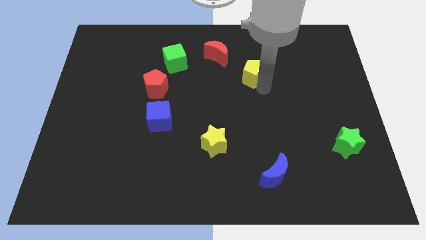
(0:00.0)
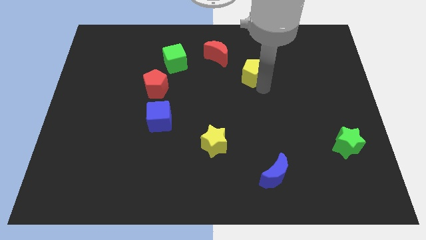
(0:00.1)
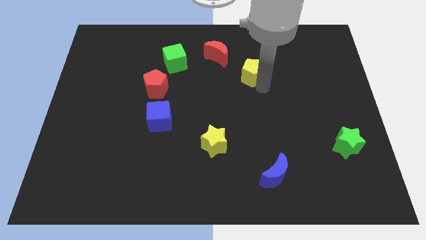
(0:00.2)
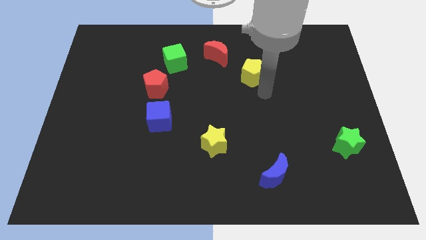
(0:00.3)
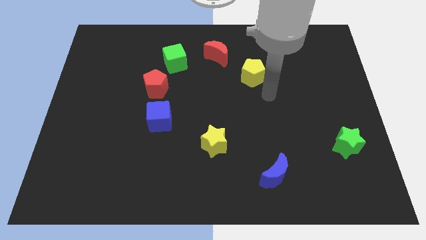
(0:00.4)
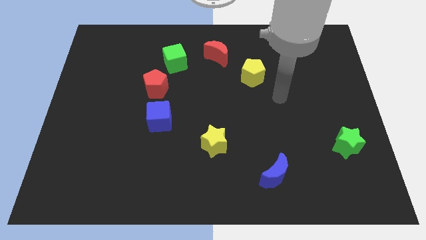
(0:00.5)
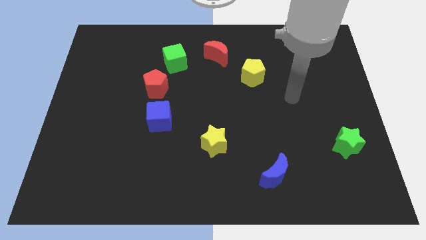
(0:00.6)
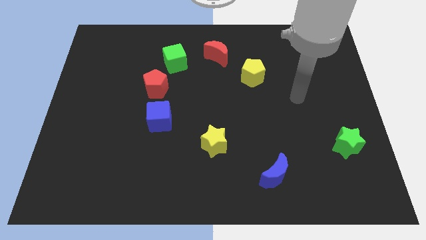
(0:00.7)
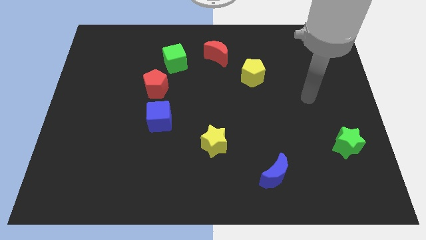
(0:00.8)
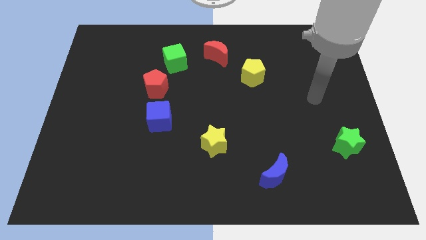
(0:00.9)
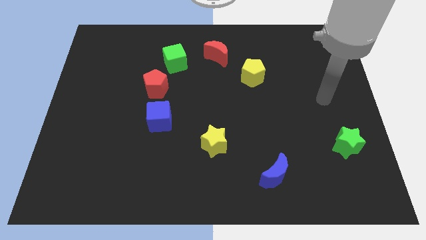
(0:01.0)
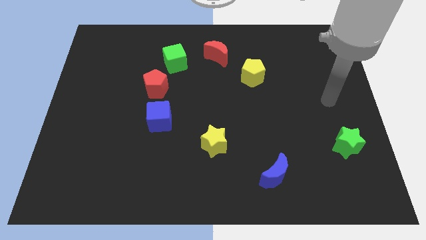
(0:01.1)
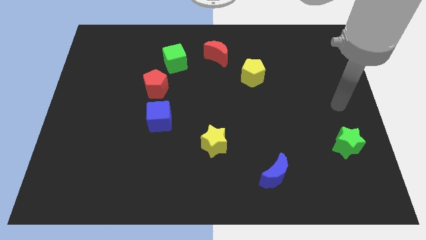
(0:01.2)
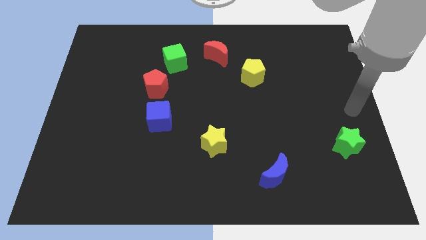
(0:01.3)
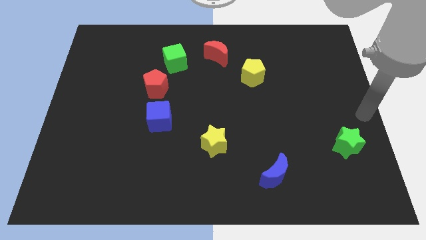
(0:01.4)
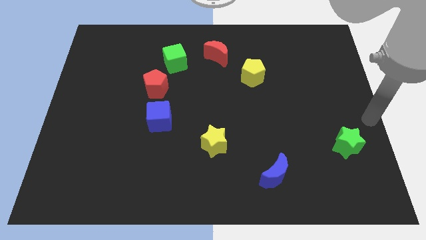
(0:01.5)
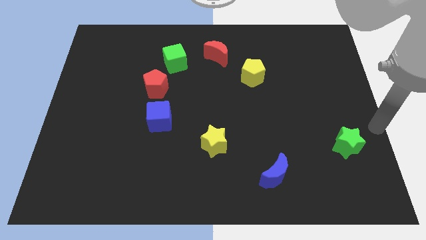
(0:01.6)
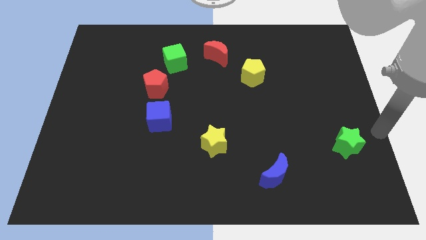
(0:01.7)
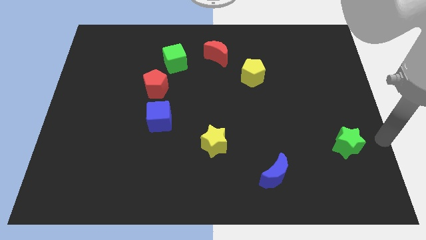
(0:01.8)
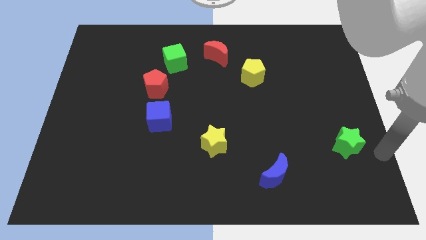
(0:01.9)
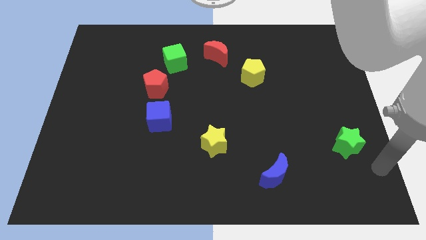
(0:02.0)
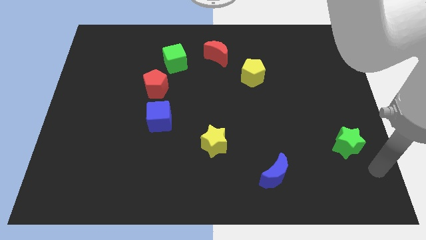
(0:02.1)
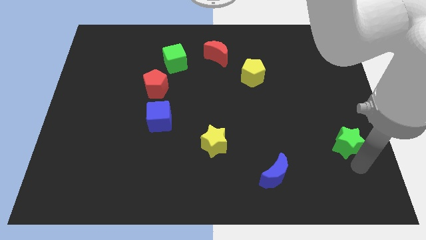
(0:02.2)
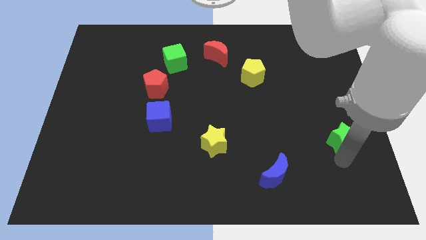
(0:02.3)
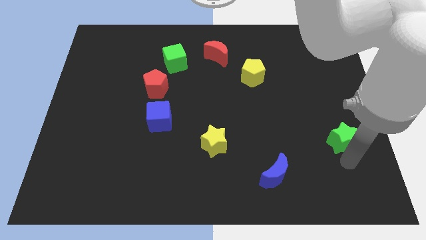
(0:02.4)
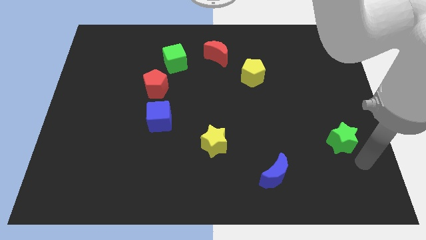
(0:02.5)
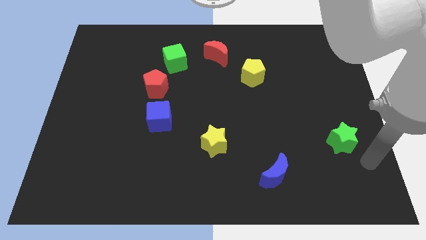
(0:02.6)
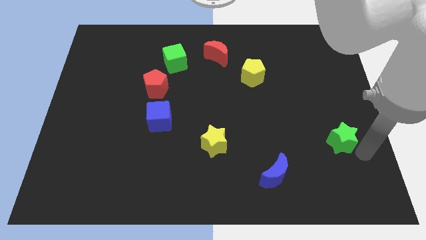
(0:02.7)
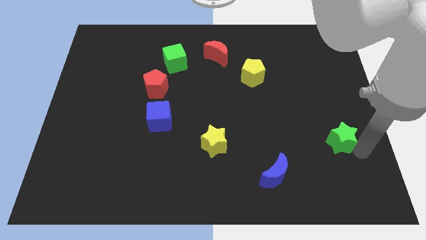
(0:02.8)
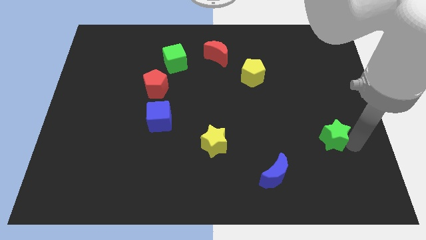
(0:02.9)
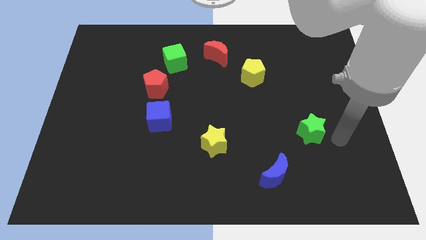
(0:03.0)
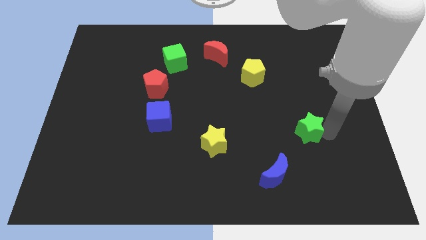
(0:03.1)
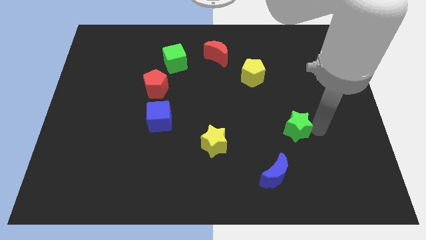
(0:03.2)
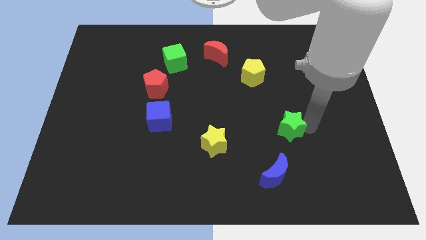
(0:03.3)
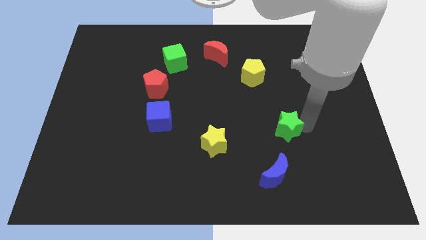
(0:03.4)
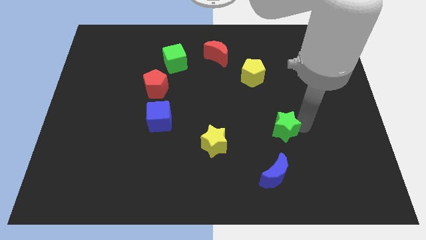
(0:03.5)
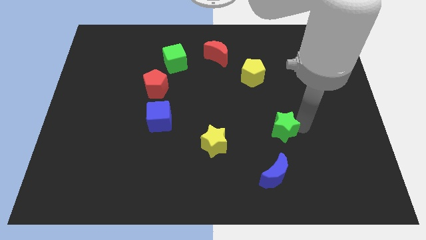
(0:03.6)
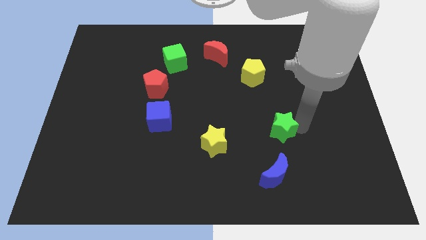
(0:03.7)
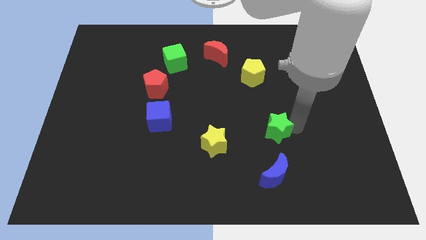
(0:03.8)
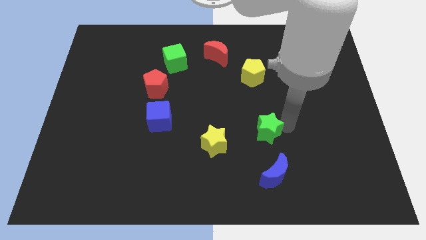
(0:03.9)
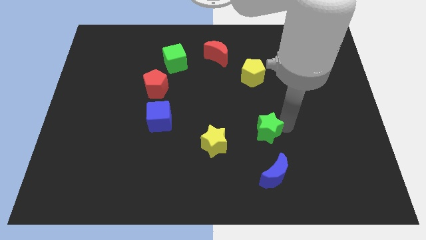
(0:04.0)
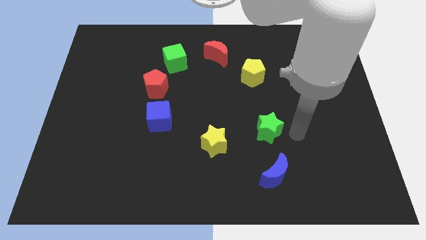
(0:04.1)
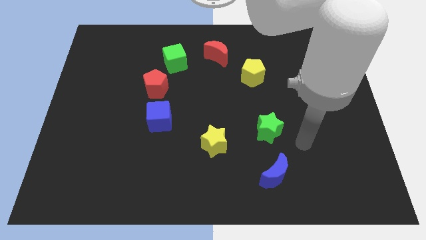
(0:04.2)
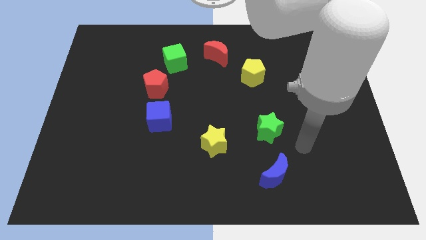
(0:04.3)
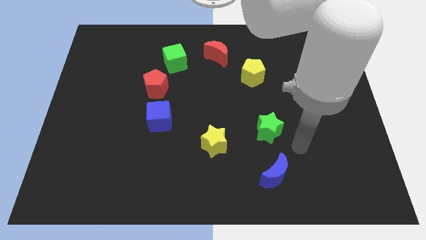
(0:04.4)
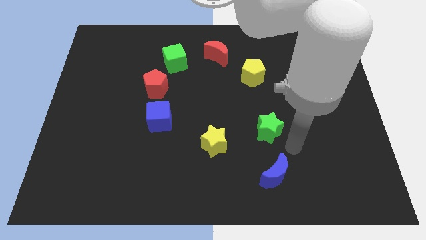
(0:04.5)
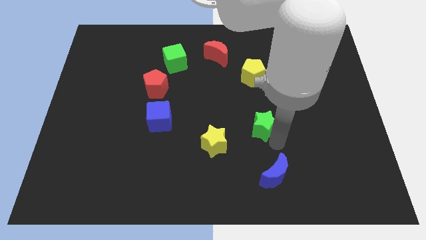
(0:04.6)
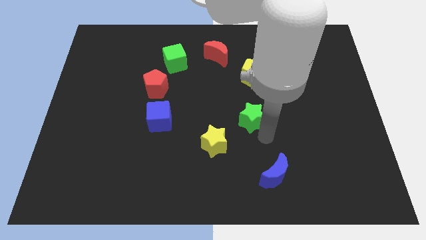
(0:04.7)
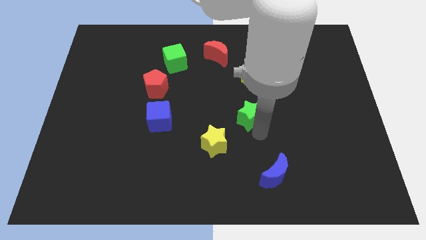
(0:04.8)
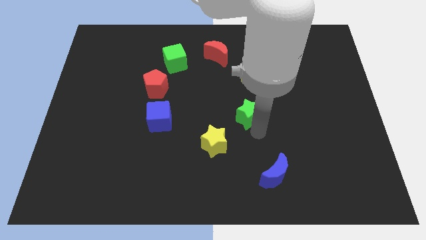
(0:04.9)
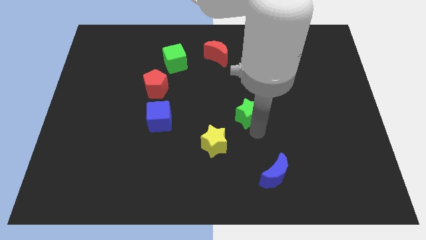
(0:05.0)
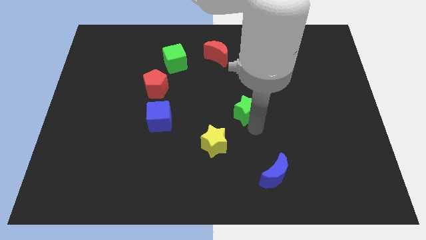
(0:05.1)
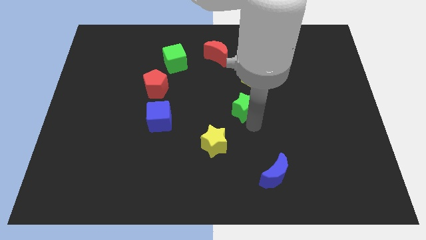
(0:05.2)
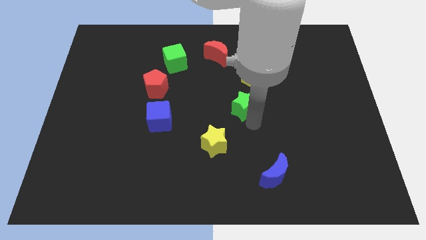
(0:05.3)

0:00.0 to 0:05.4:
place the green star bottom of the yellow pentagon

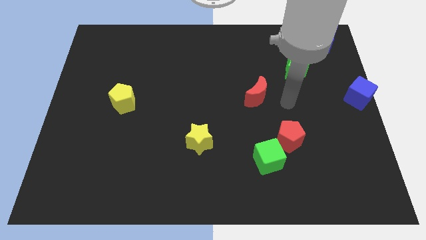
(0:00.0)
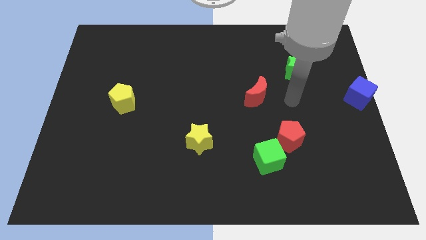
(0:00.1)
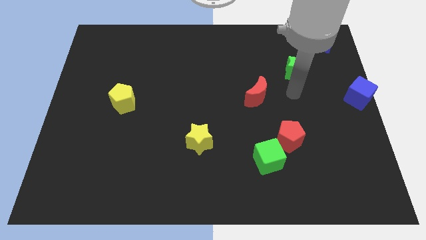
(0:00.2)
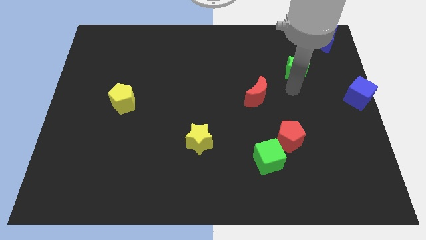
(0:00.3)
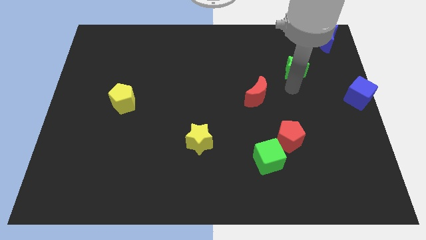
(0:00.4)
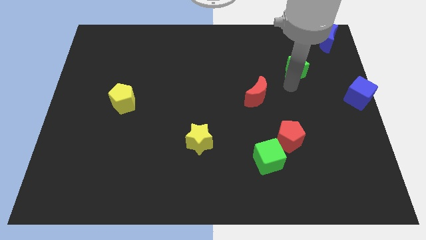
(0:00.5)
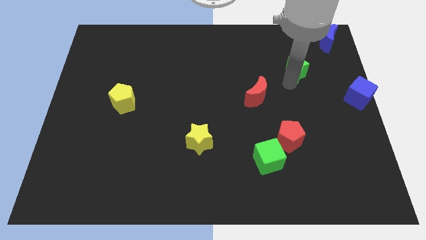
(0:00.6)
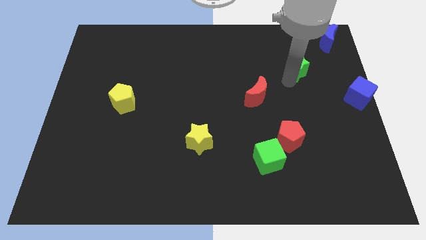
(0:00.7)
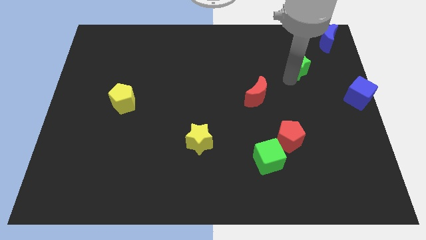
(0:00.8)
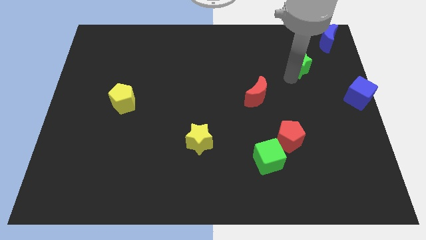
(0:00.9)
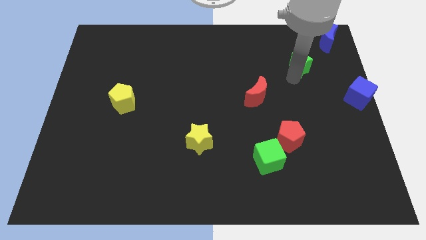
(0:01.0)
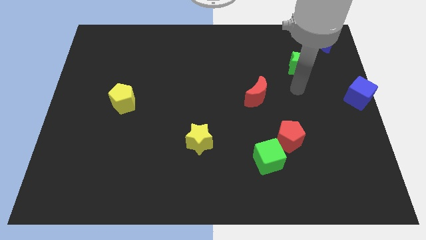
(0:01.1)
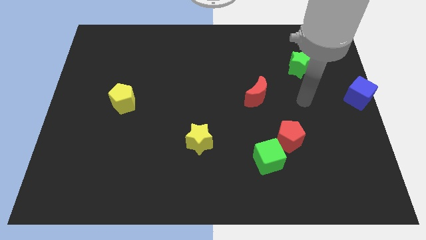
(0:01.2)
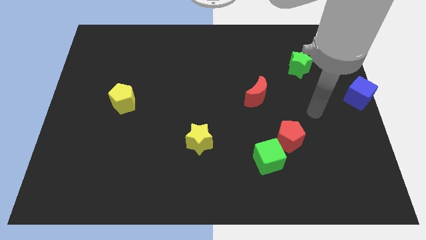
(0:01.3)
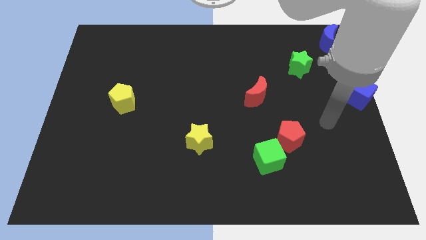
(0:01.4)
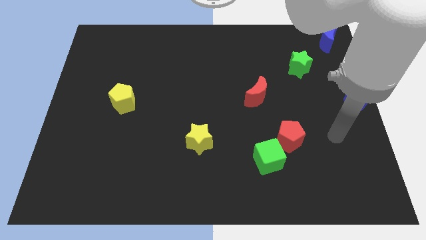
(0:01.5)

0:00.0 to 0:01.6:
slightly push the green star to the top of the board

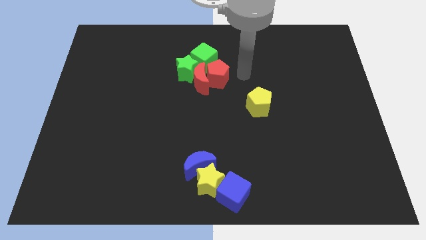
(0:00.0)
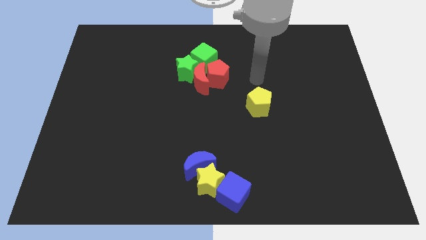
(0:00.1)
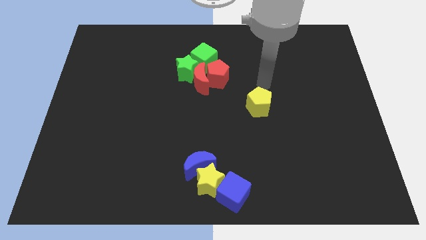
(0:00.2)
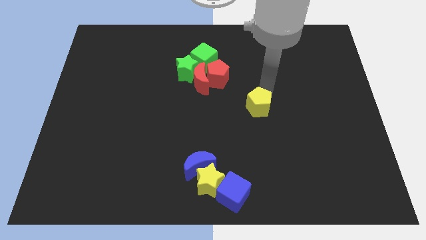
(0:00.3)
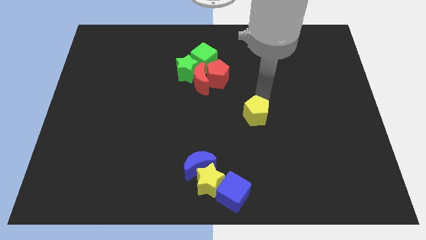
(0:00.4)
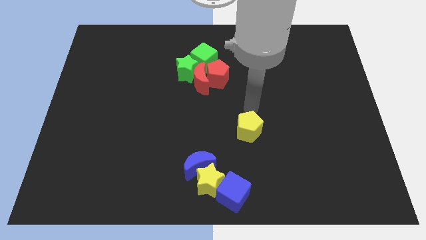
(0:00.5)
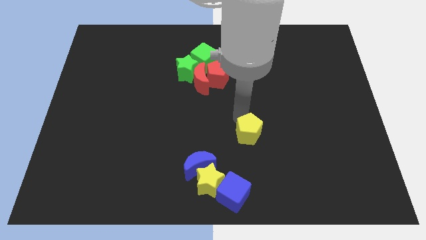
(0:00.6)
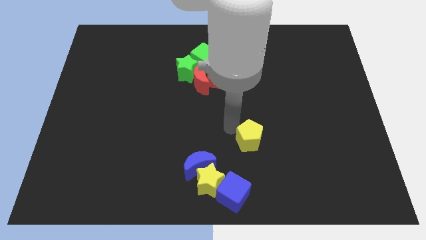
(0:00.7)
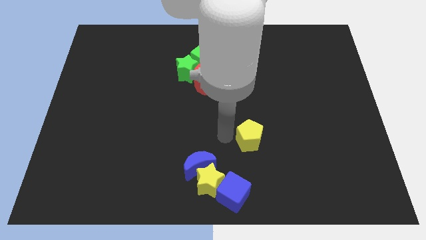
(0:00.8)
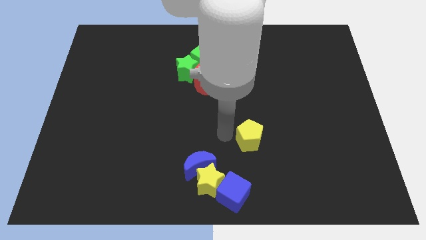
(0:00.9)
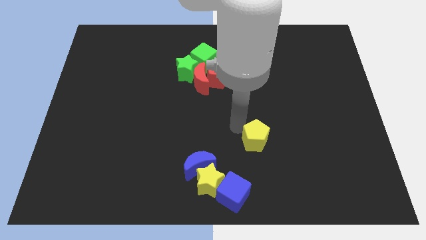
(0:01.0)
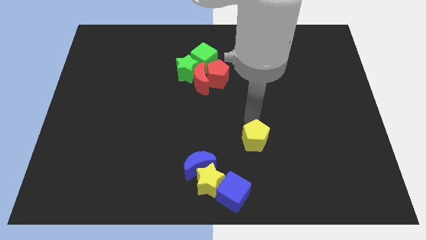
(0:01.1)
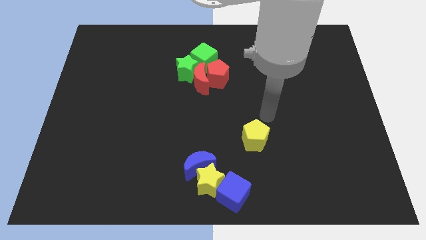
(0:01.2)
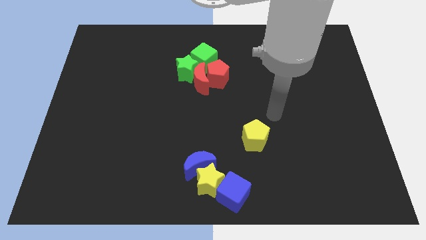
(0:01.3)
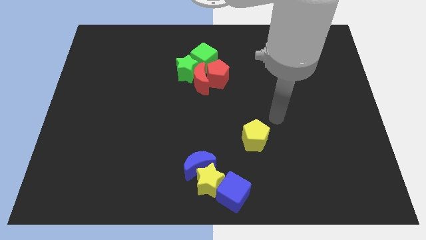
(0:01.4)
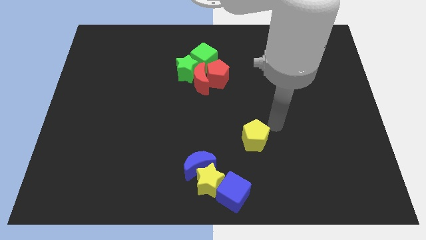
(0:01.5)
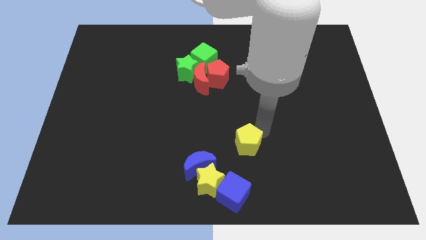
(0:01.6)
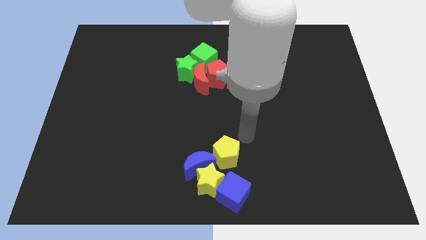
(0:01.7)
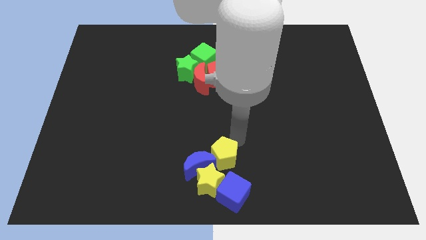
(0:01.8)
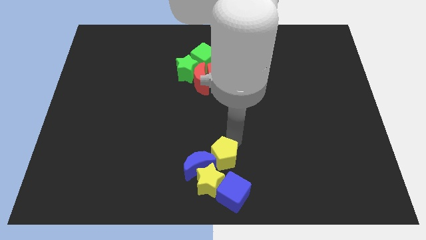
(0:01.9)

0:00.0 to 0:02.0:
place the yellow pentagon above to the yellow star
